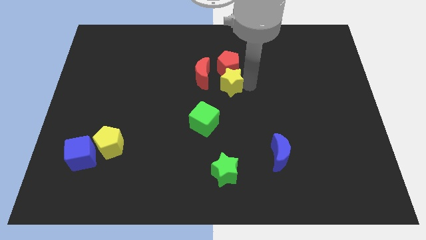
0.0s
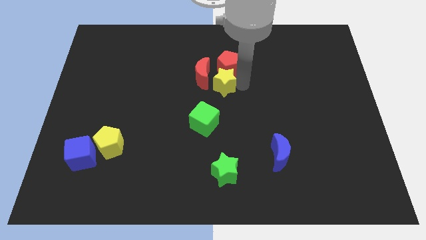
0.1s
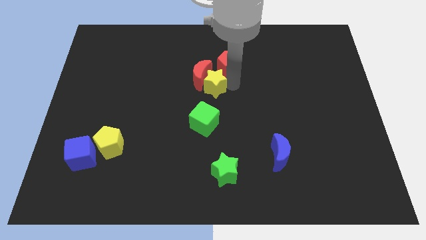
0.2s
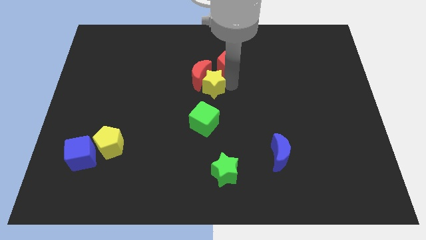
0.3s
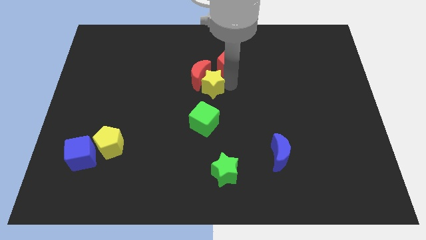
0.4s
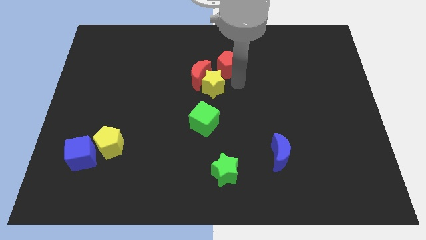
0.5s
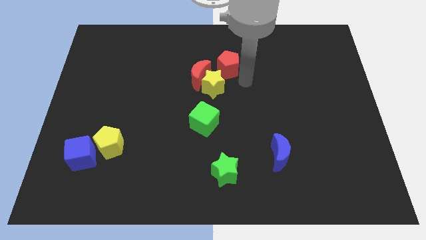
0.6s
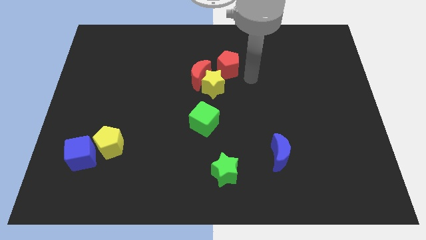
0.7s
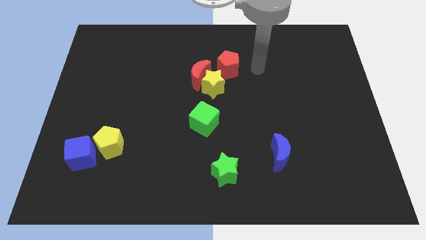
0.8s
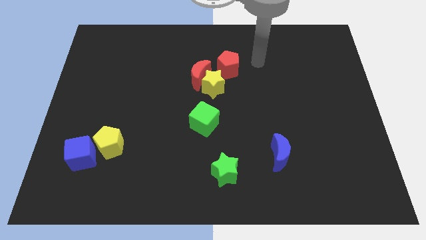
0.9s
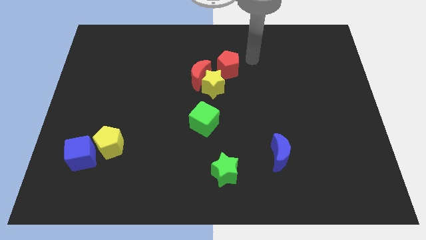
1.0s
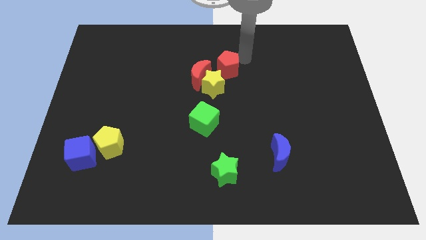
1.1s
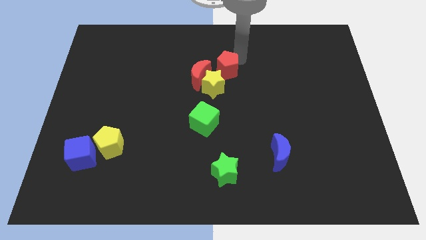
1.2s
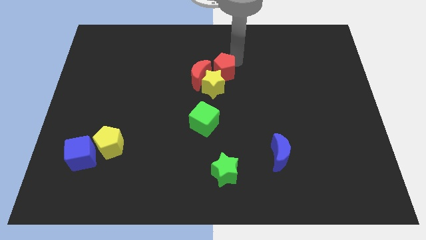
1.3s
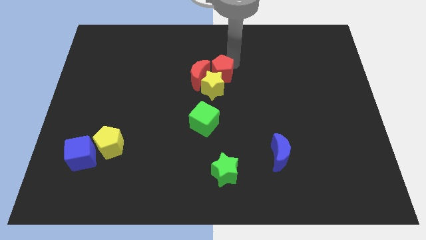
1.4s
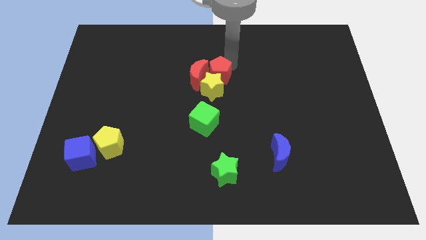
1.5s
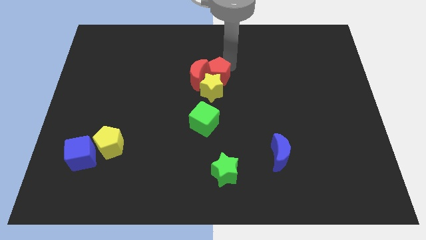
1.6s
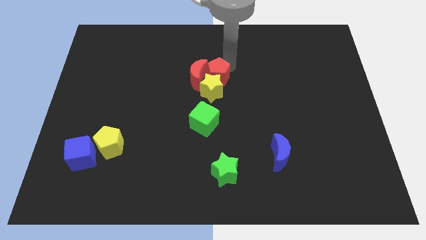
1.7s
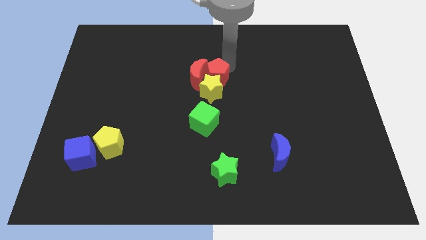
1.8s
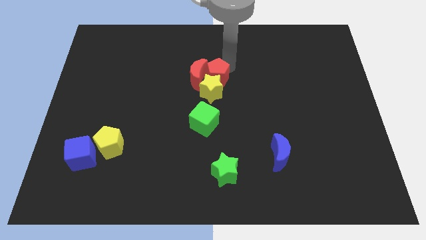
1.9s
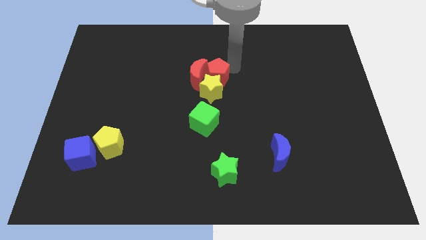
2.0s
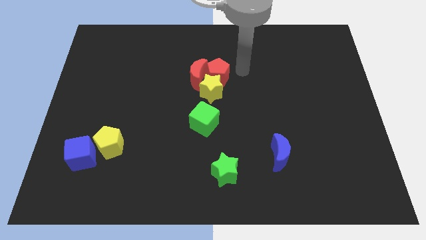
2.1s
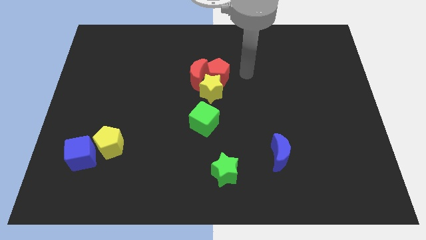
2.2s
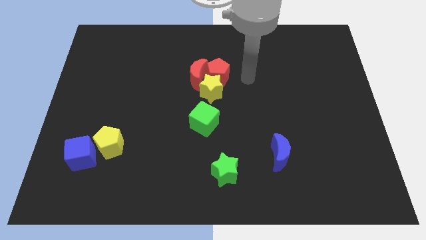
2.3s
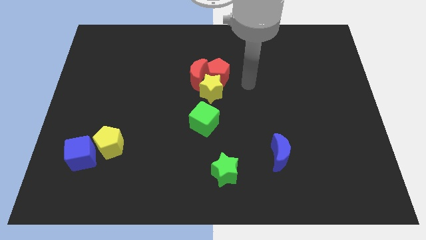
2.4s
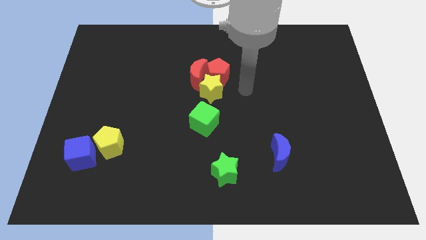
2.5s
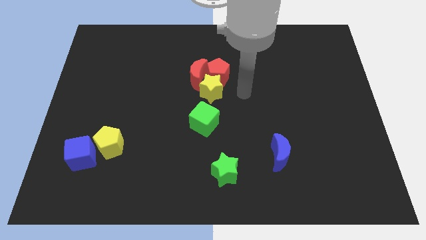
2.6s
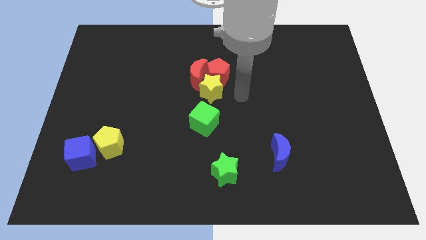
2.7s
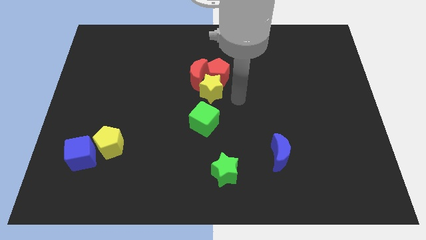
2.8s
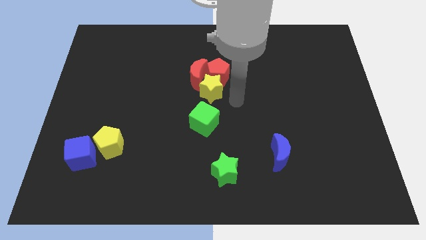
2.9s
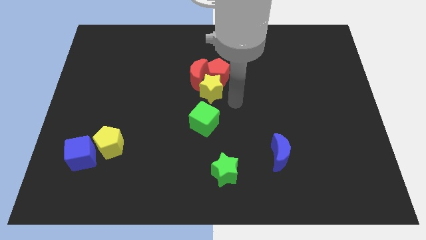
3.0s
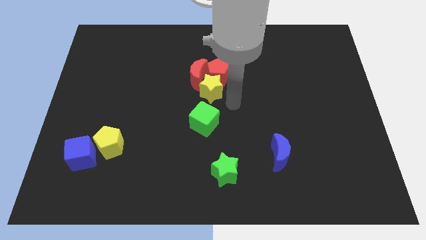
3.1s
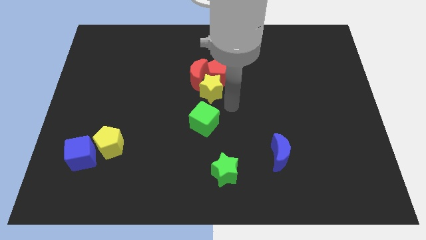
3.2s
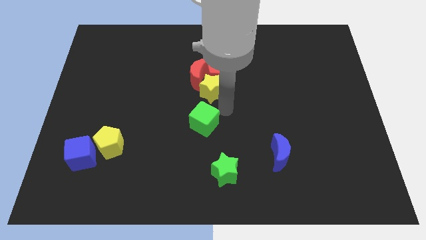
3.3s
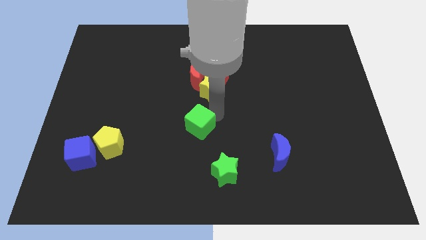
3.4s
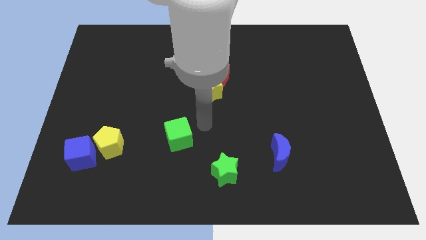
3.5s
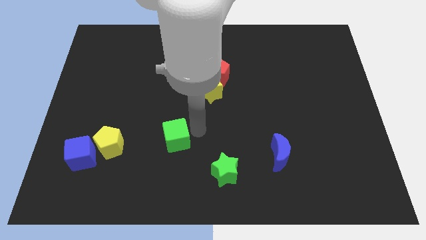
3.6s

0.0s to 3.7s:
push the green cube to the right side of the yellow peentagon

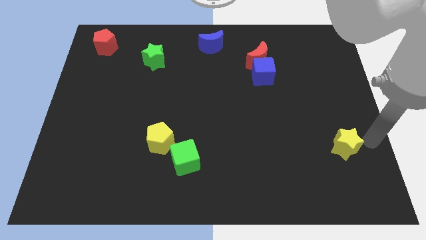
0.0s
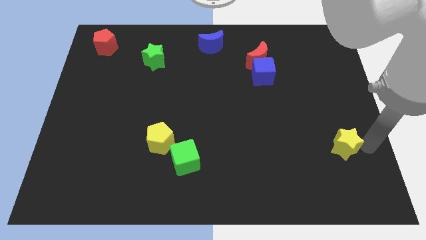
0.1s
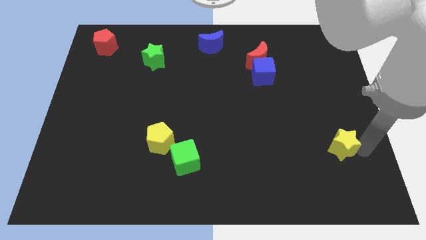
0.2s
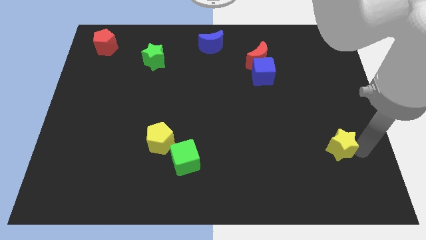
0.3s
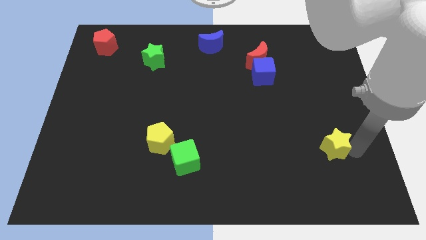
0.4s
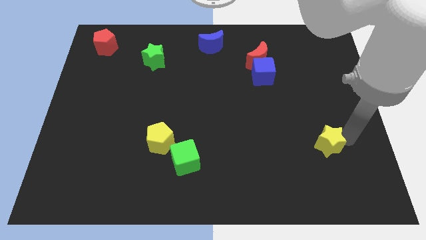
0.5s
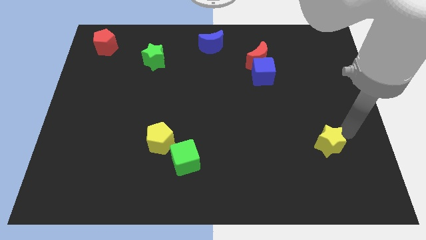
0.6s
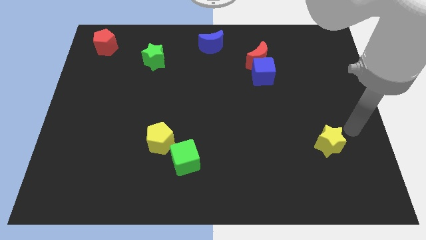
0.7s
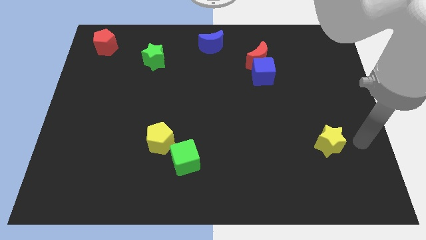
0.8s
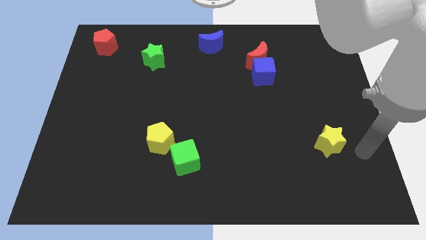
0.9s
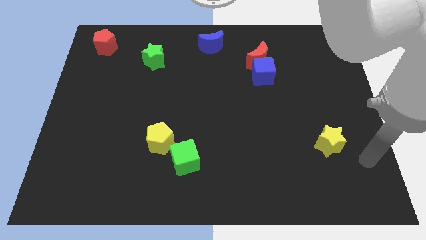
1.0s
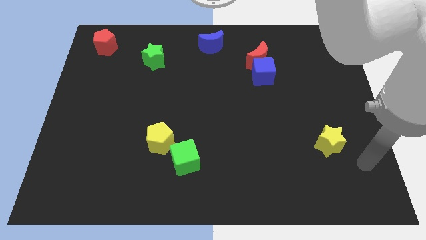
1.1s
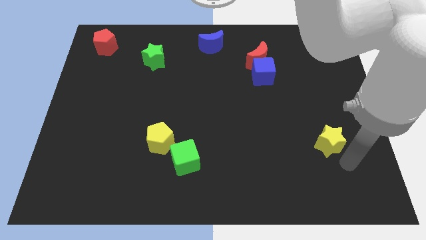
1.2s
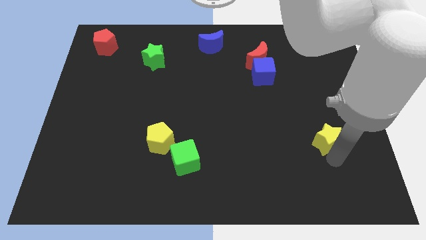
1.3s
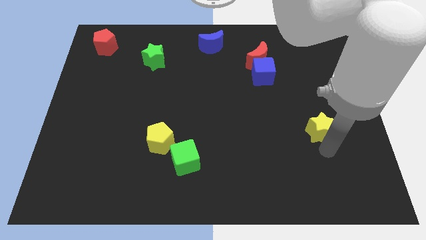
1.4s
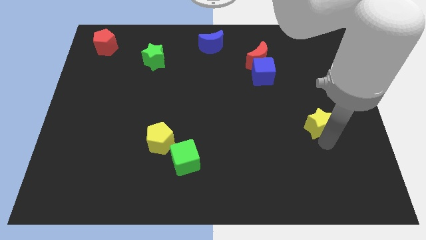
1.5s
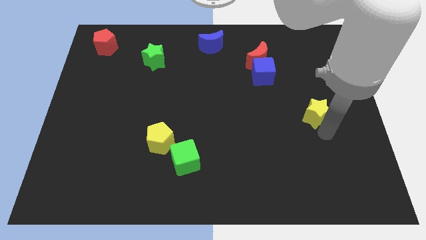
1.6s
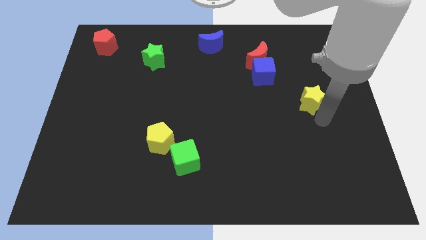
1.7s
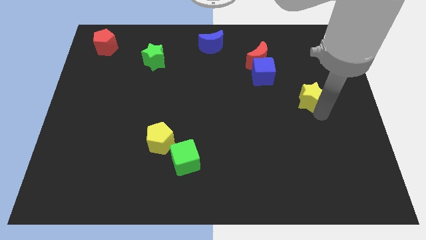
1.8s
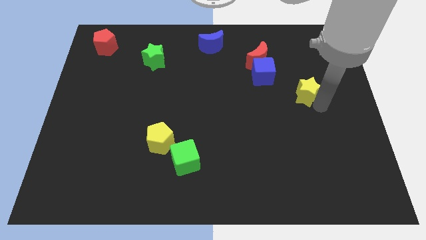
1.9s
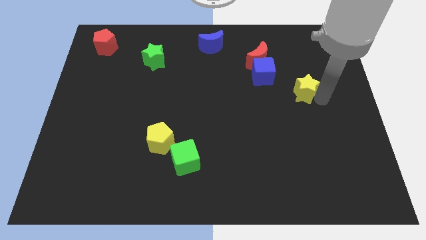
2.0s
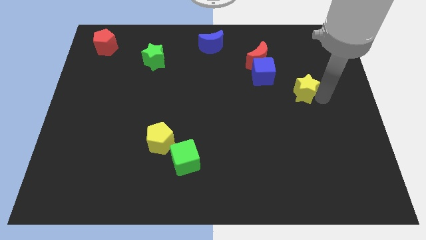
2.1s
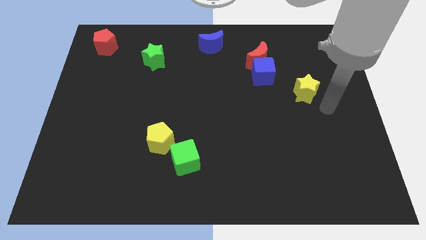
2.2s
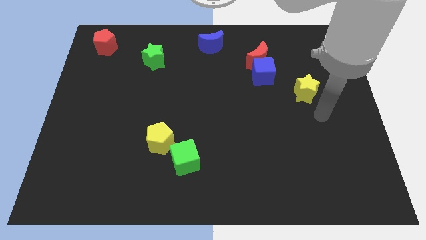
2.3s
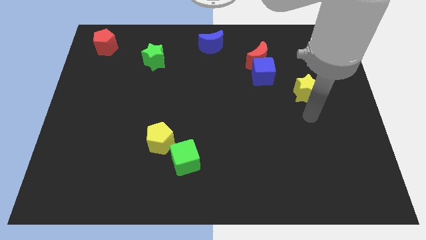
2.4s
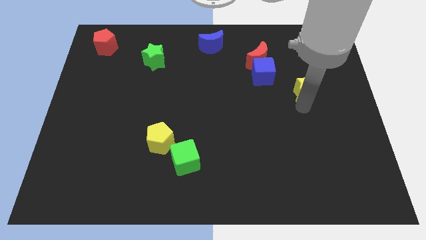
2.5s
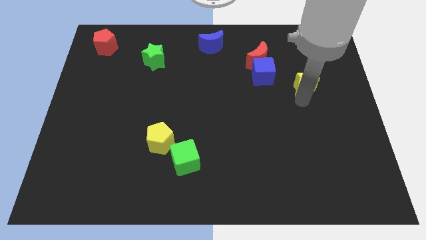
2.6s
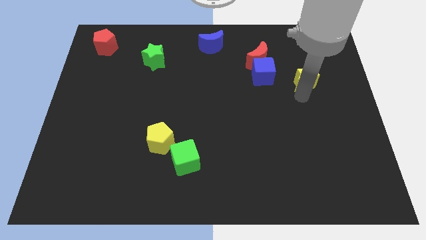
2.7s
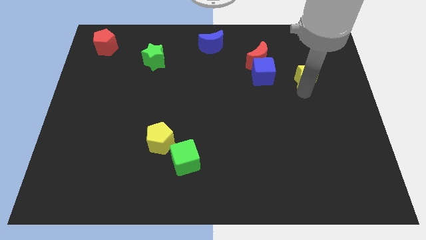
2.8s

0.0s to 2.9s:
move the yellow star to the right of the blue cube

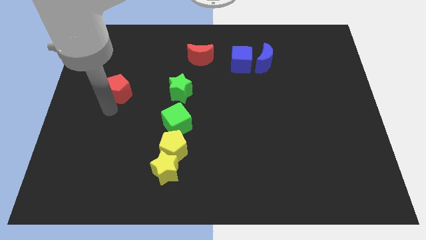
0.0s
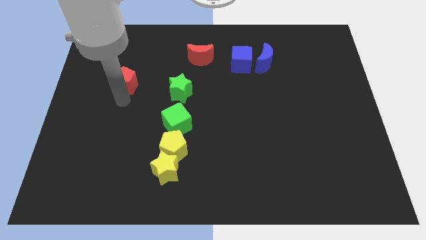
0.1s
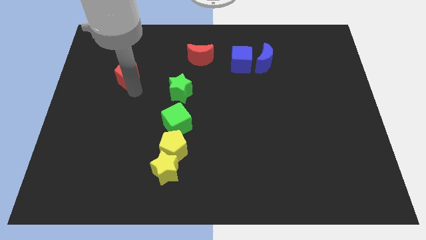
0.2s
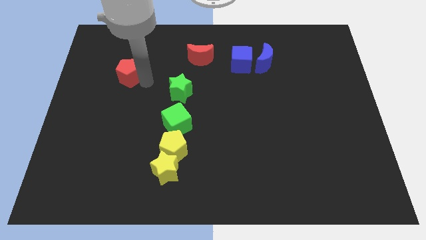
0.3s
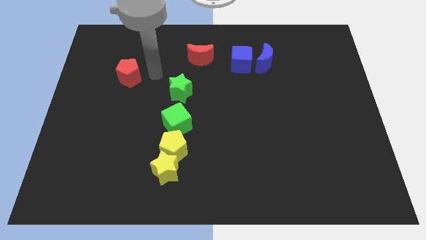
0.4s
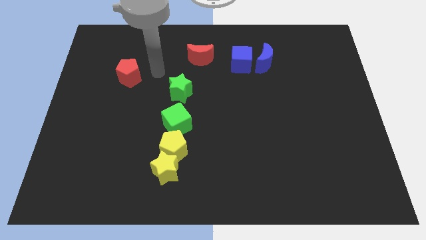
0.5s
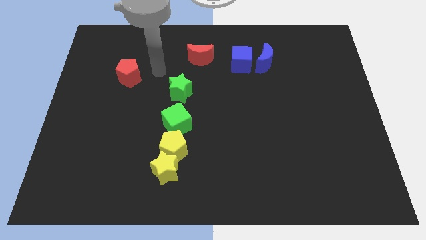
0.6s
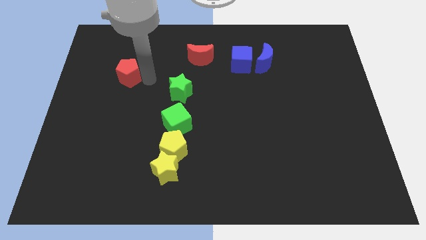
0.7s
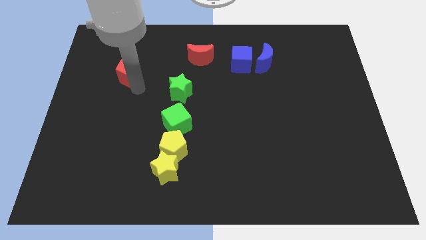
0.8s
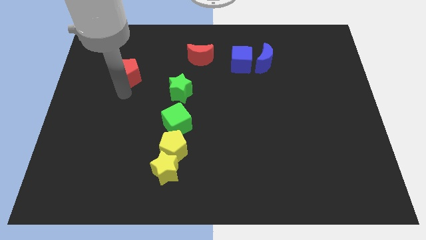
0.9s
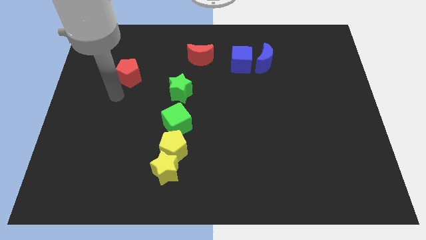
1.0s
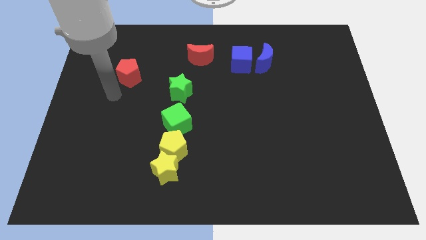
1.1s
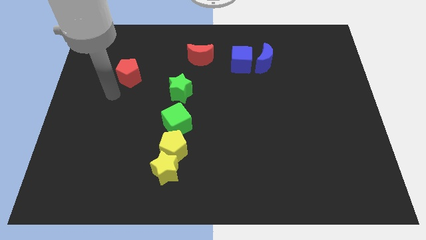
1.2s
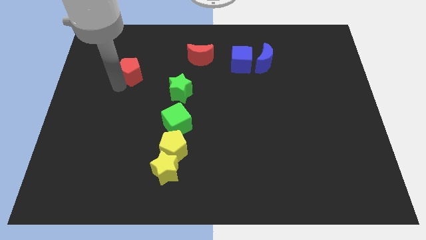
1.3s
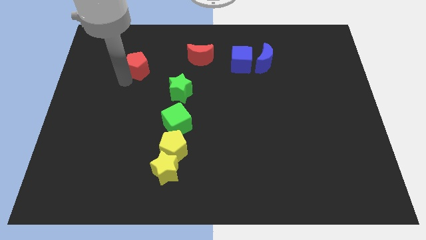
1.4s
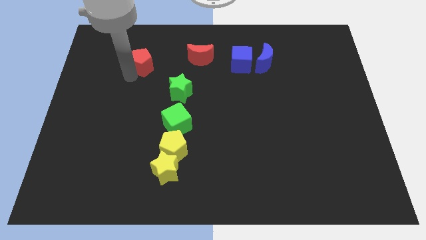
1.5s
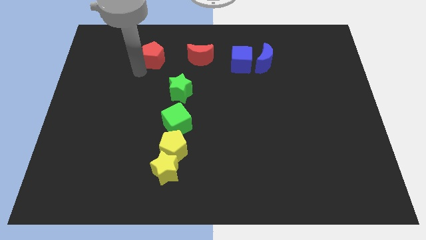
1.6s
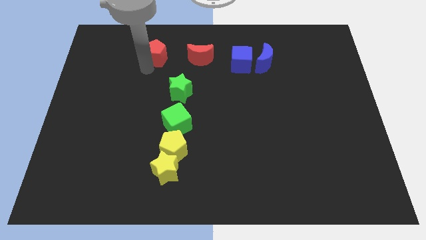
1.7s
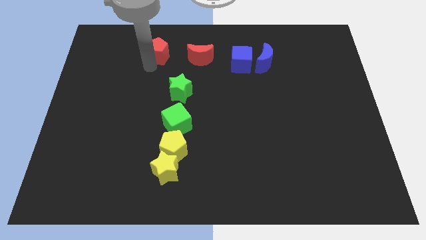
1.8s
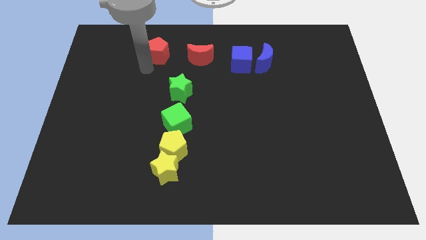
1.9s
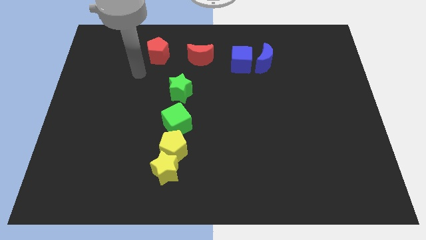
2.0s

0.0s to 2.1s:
move the red pentagon to the left side of the red crescent

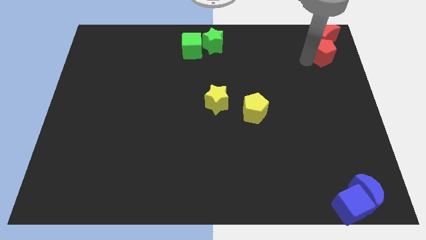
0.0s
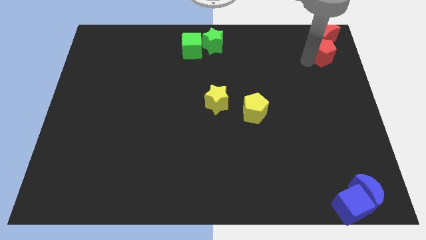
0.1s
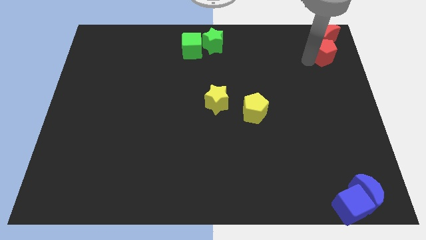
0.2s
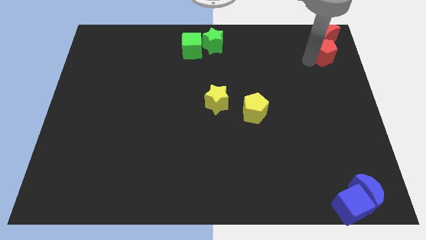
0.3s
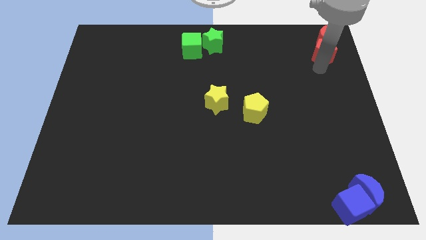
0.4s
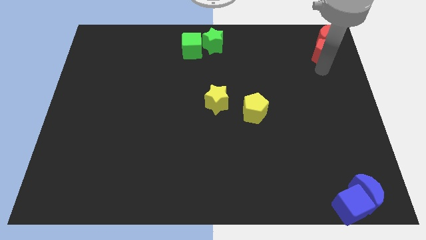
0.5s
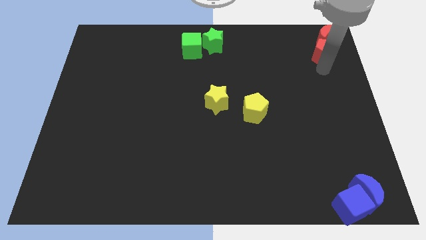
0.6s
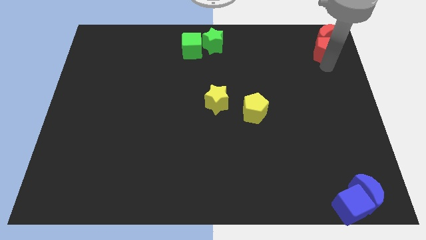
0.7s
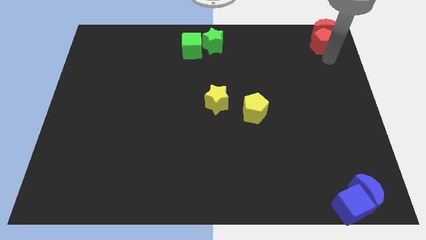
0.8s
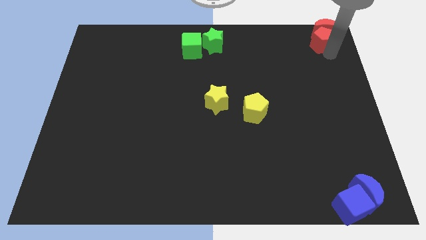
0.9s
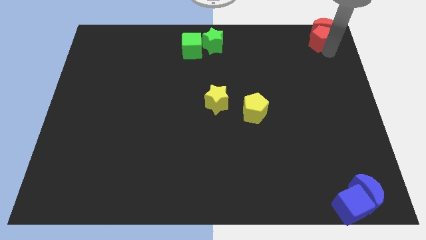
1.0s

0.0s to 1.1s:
push red blocks to the top right corner
